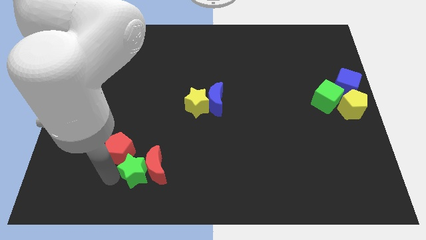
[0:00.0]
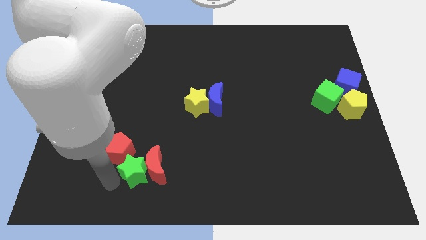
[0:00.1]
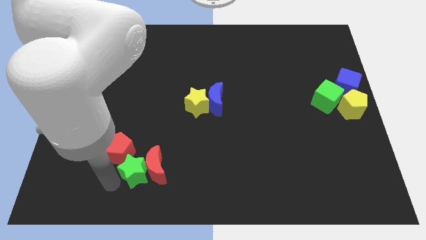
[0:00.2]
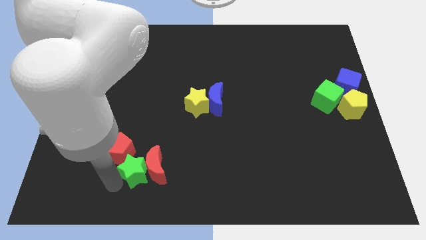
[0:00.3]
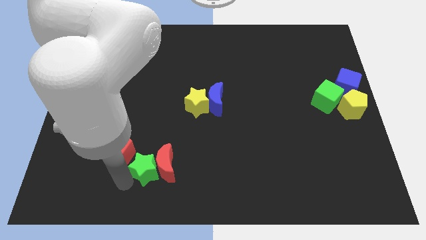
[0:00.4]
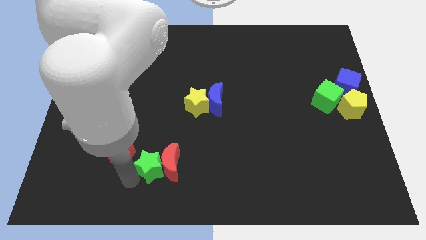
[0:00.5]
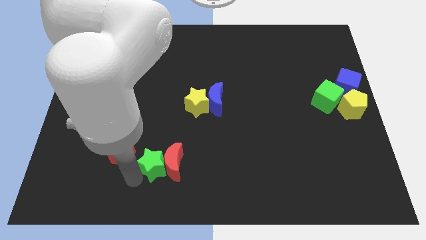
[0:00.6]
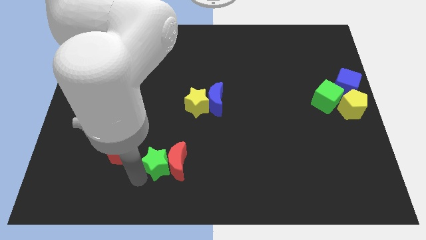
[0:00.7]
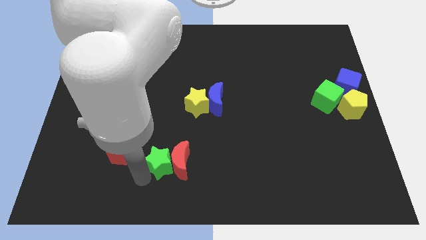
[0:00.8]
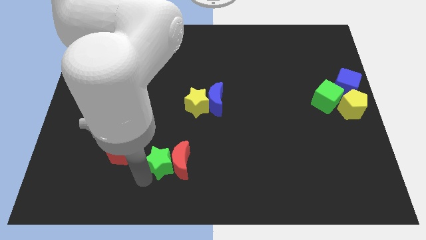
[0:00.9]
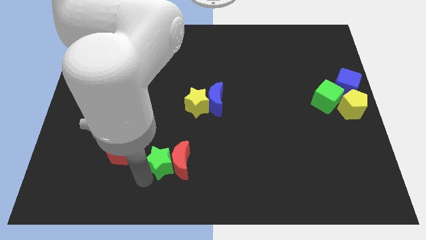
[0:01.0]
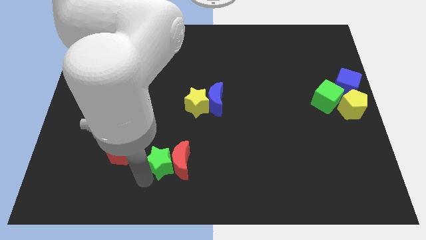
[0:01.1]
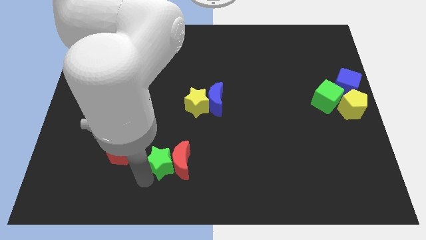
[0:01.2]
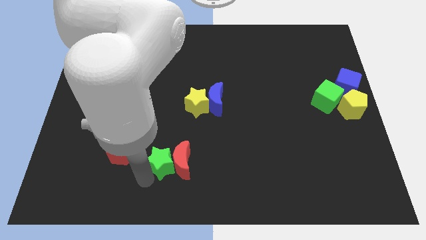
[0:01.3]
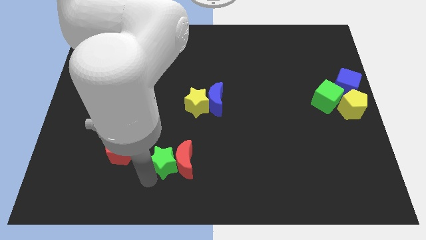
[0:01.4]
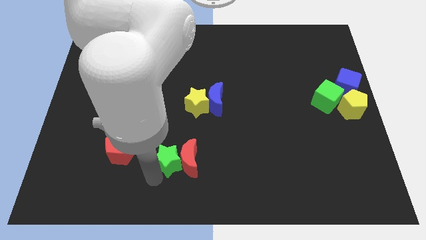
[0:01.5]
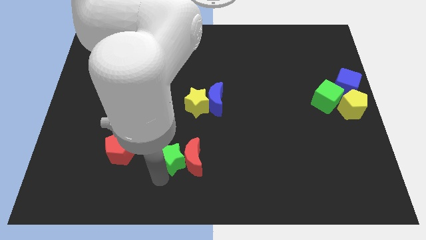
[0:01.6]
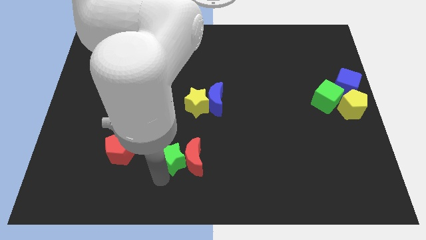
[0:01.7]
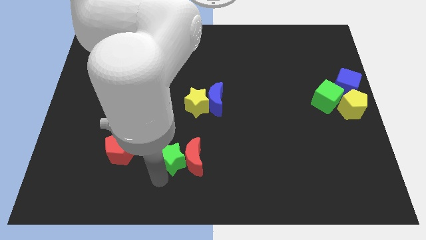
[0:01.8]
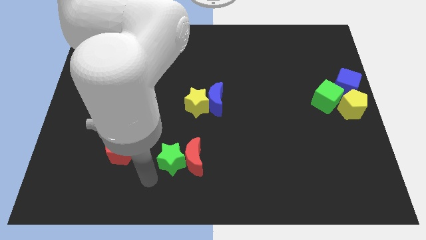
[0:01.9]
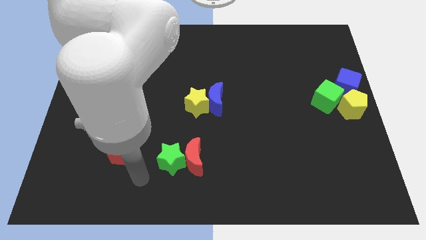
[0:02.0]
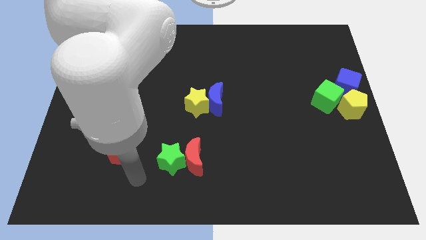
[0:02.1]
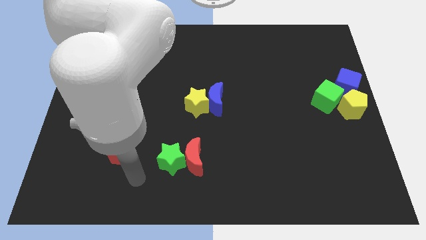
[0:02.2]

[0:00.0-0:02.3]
push the red crescent with the green star towards the right side of the board

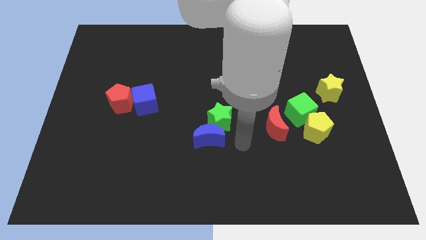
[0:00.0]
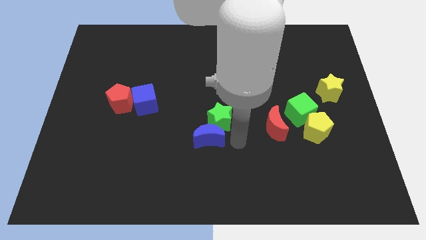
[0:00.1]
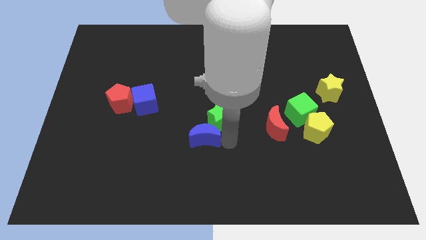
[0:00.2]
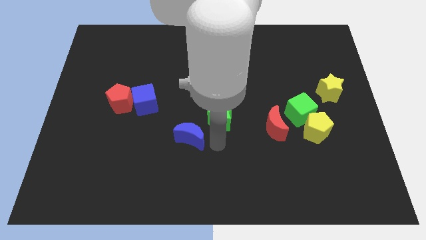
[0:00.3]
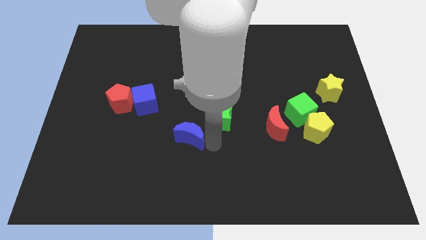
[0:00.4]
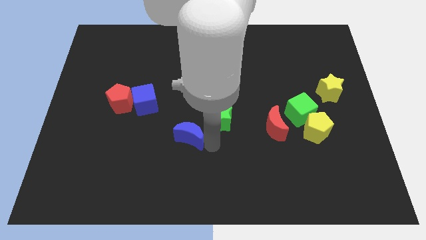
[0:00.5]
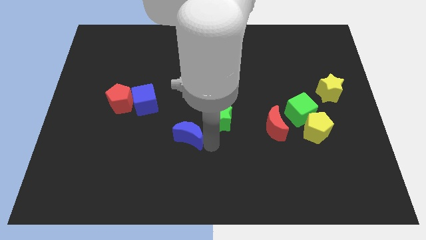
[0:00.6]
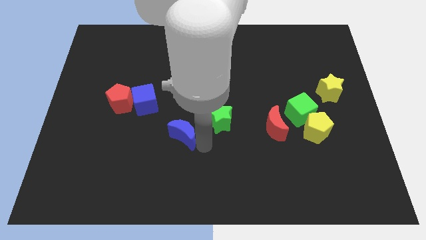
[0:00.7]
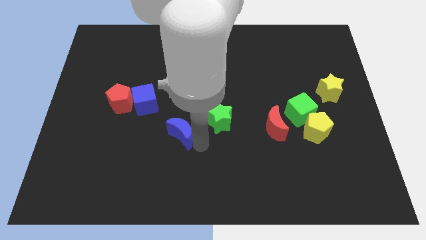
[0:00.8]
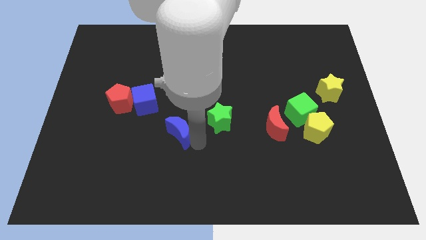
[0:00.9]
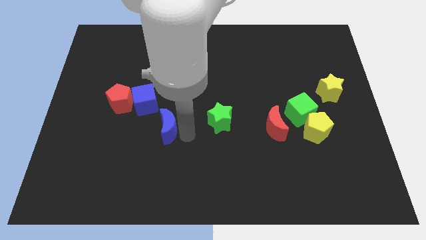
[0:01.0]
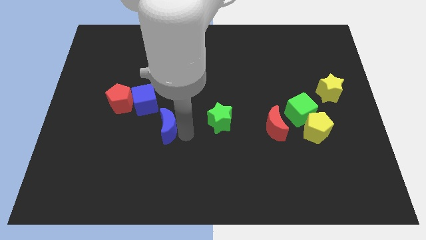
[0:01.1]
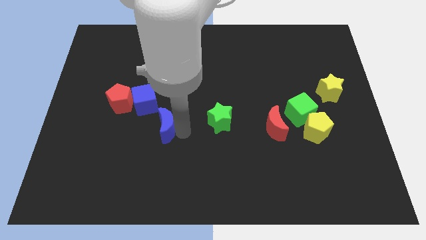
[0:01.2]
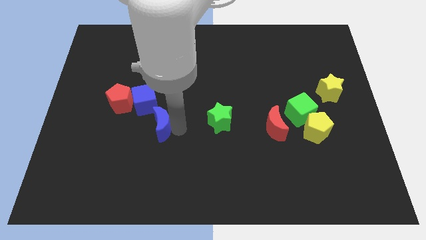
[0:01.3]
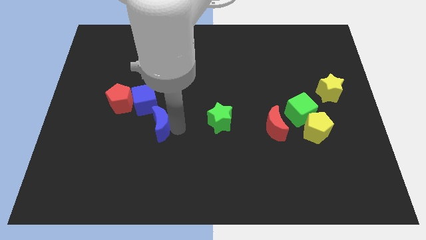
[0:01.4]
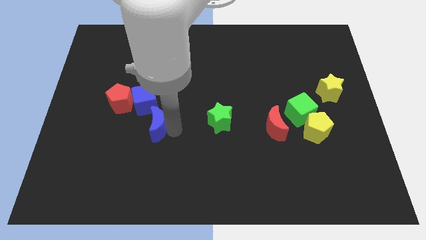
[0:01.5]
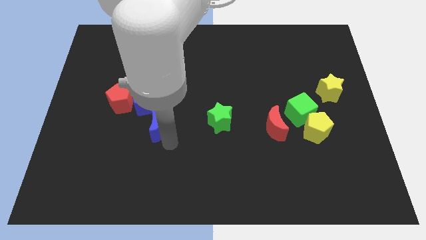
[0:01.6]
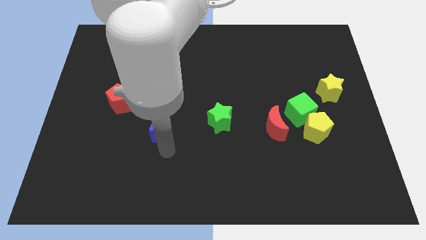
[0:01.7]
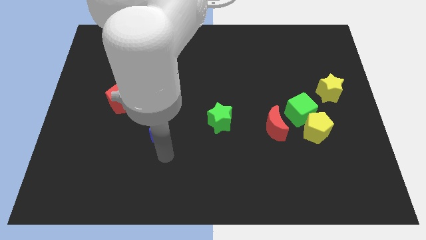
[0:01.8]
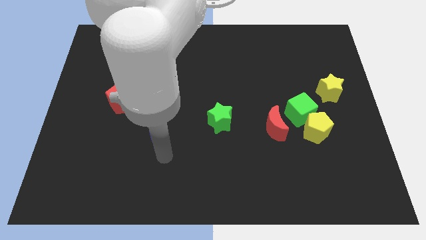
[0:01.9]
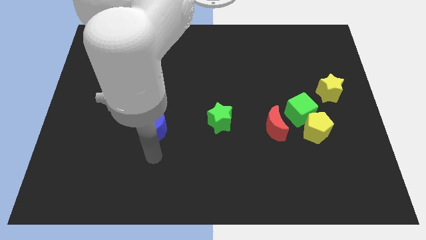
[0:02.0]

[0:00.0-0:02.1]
move blue moon into blue cube

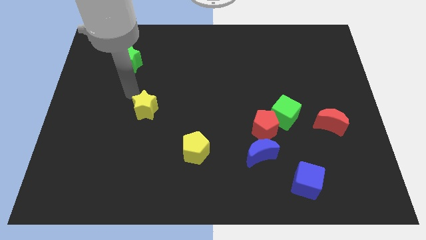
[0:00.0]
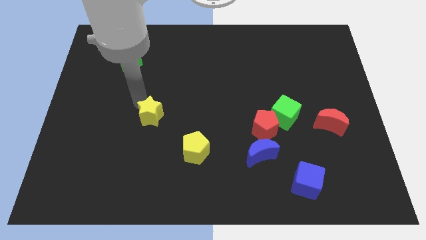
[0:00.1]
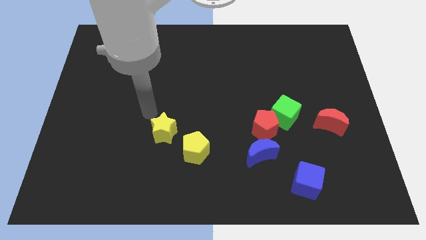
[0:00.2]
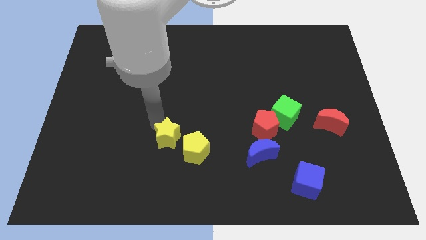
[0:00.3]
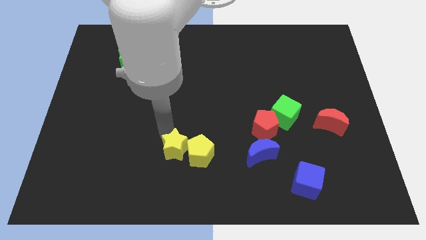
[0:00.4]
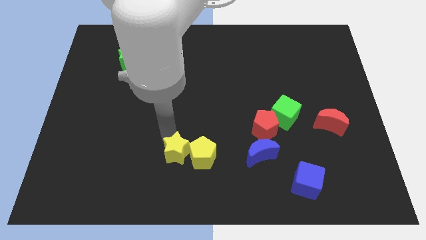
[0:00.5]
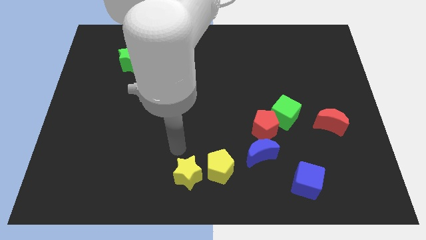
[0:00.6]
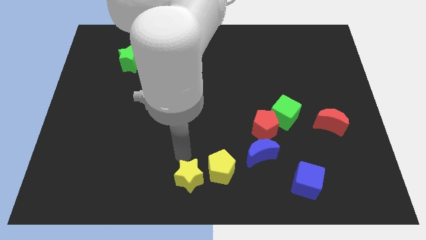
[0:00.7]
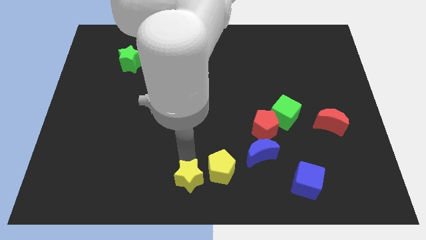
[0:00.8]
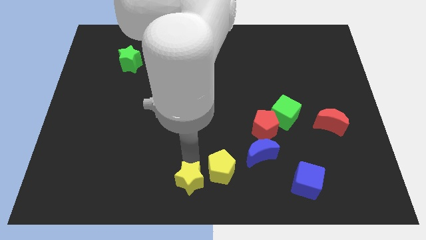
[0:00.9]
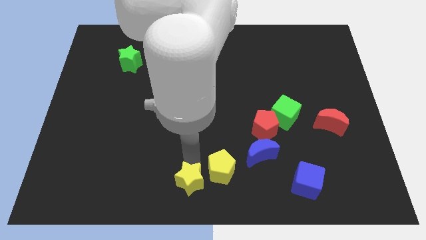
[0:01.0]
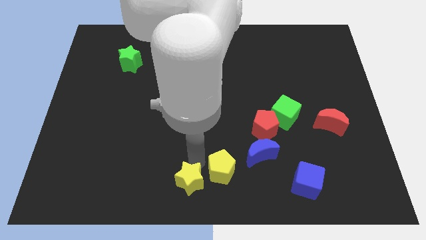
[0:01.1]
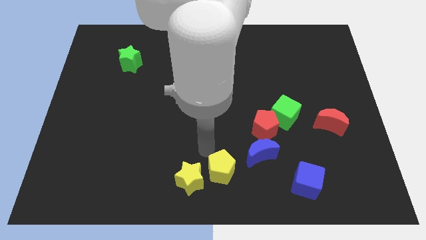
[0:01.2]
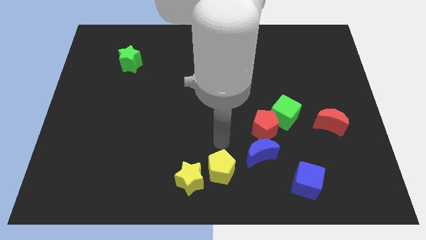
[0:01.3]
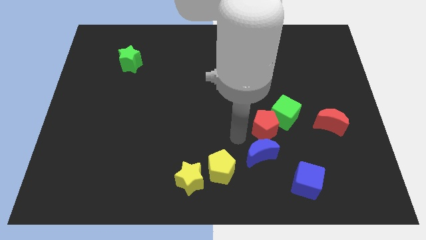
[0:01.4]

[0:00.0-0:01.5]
push yellow star along with the yellow pentagon towards the bottom center

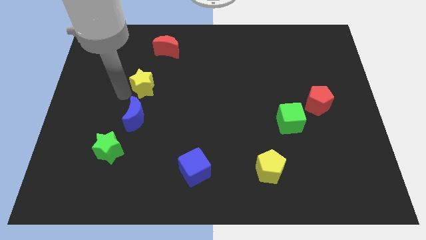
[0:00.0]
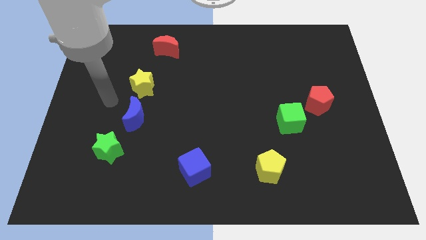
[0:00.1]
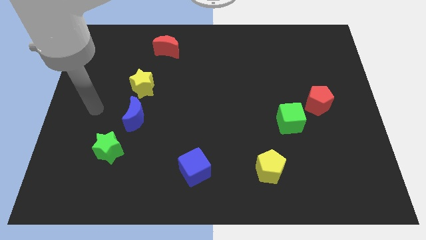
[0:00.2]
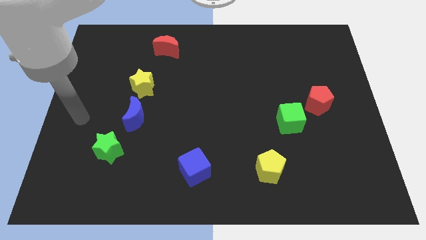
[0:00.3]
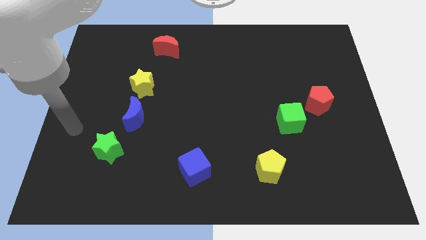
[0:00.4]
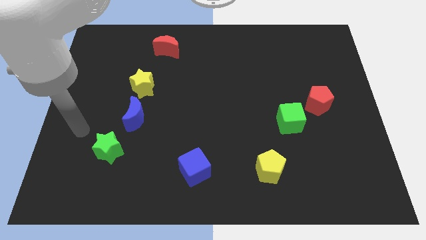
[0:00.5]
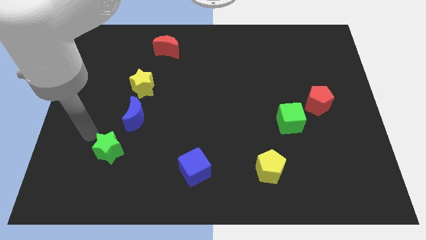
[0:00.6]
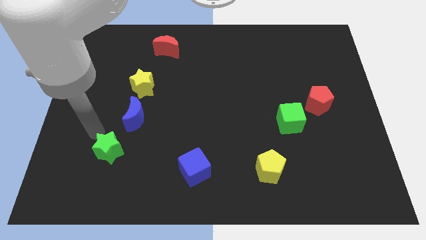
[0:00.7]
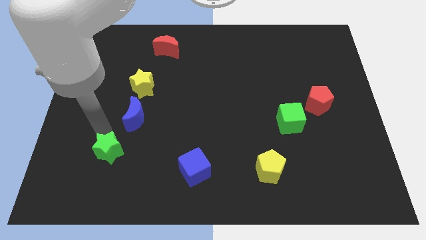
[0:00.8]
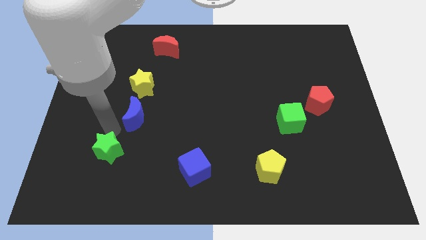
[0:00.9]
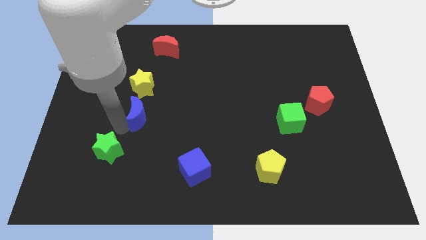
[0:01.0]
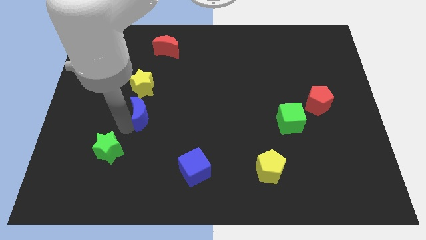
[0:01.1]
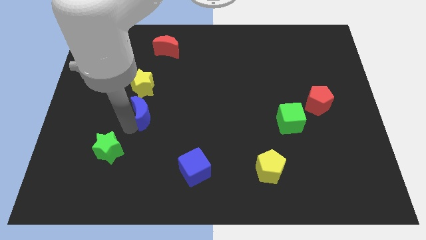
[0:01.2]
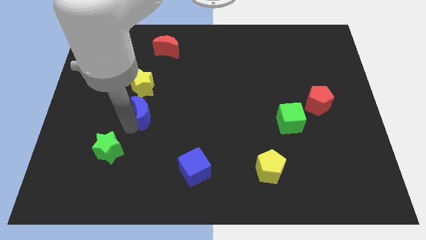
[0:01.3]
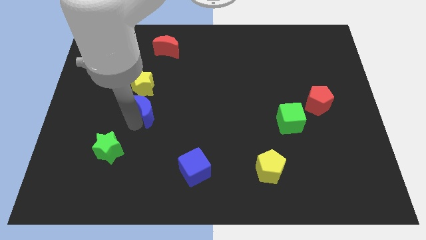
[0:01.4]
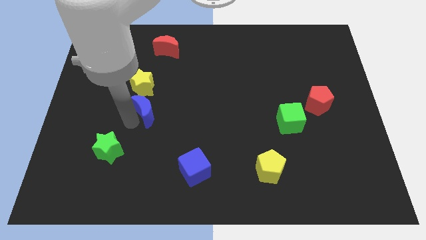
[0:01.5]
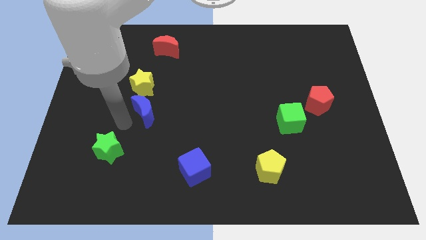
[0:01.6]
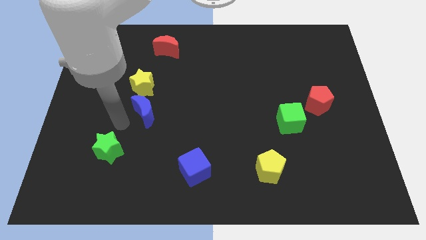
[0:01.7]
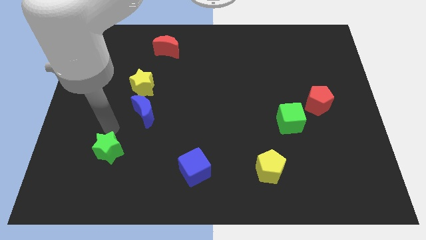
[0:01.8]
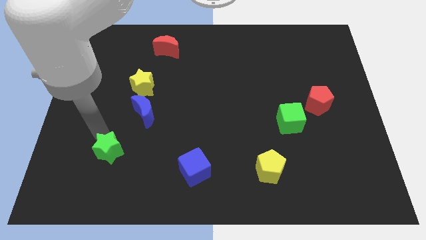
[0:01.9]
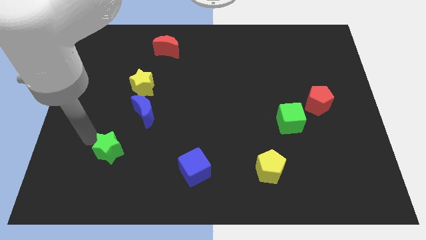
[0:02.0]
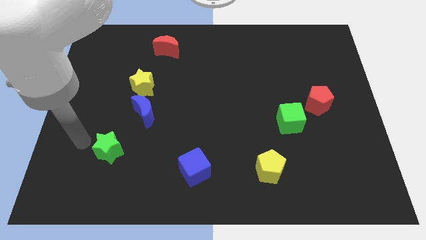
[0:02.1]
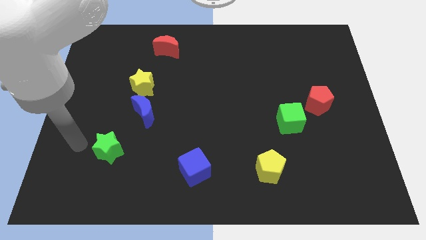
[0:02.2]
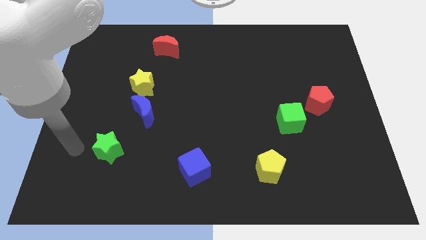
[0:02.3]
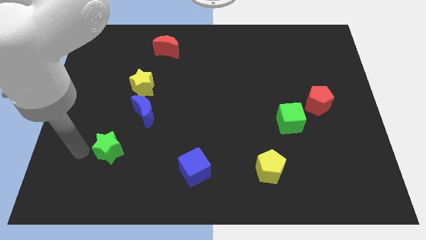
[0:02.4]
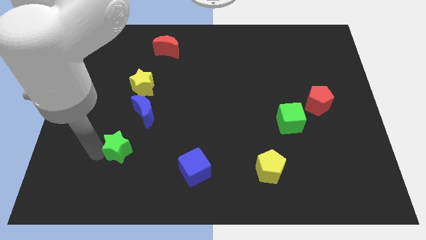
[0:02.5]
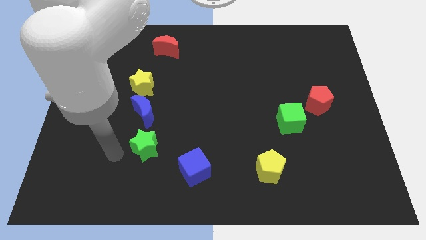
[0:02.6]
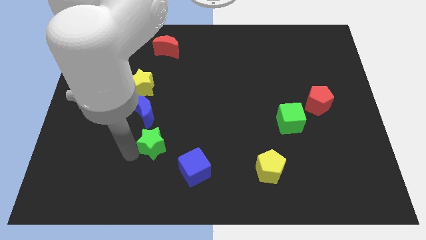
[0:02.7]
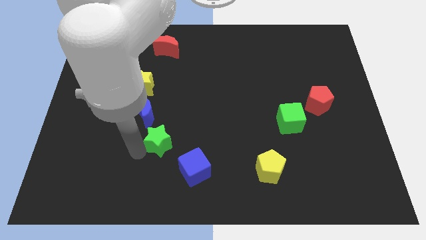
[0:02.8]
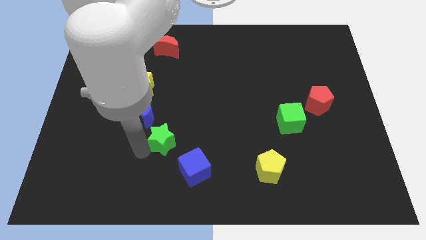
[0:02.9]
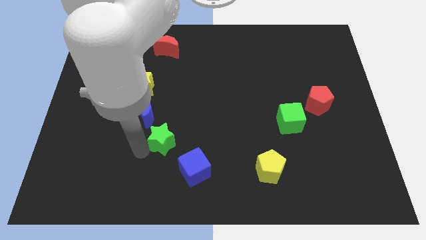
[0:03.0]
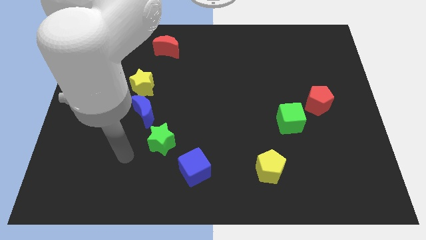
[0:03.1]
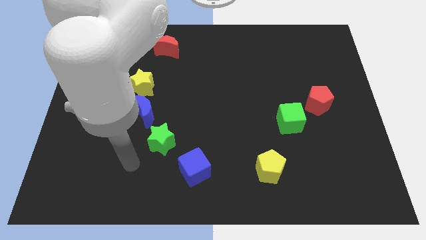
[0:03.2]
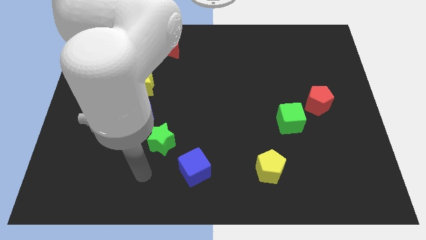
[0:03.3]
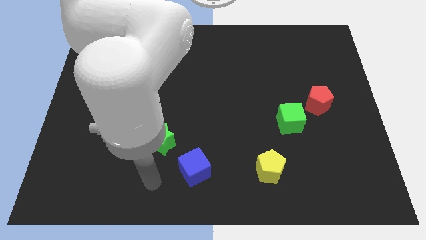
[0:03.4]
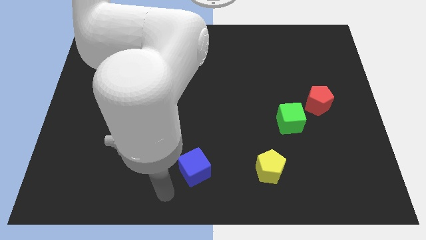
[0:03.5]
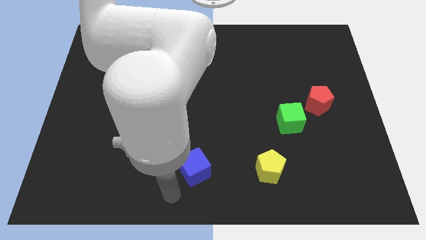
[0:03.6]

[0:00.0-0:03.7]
push the blue moon and green star between yellow star and blue cube
